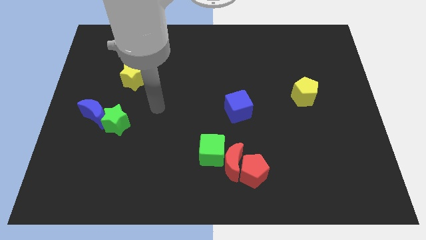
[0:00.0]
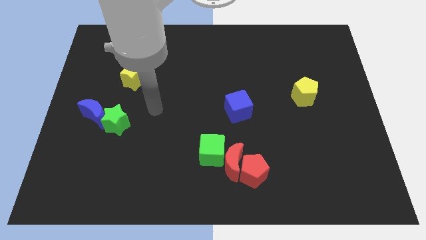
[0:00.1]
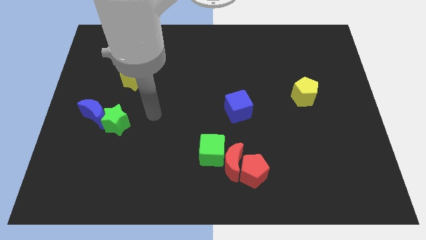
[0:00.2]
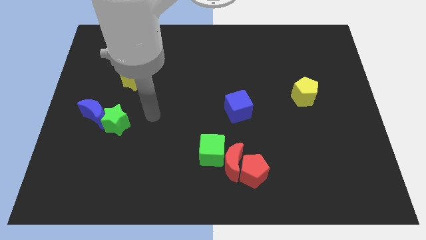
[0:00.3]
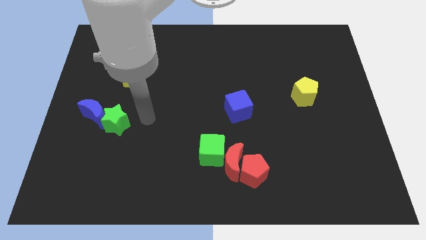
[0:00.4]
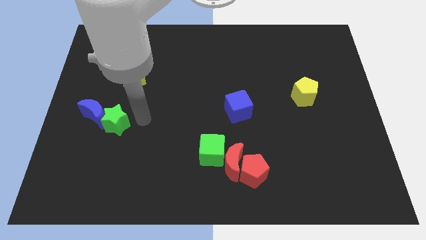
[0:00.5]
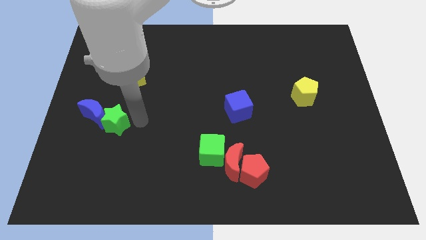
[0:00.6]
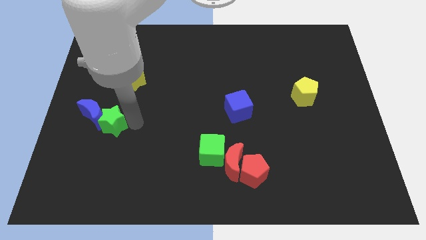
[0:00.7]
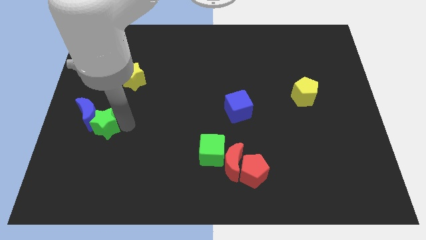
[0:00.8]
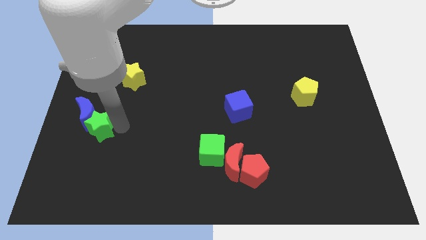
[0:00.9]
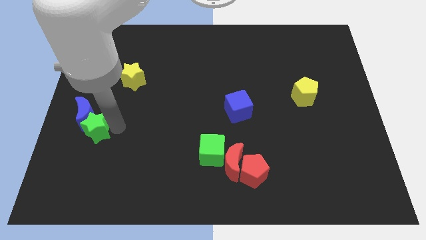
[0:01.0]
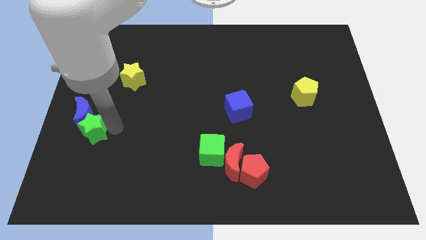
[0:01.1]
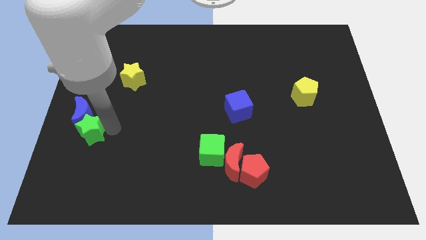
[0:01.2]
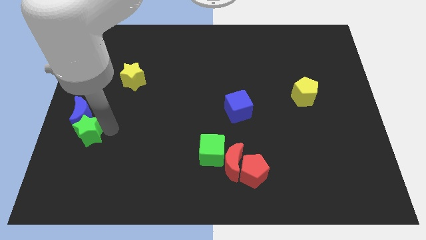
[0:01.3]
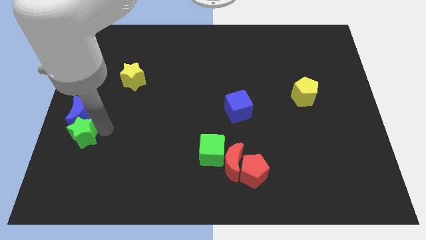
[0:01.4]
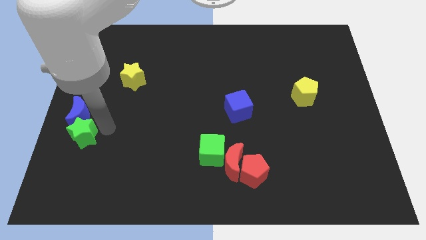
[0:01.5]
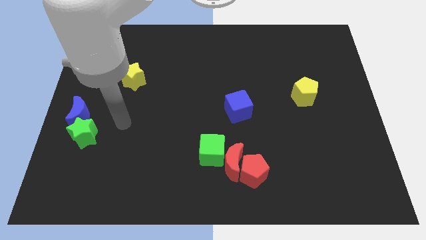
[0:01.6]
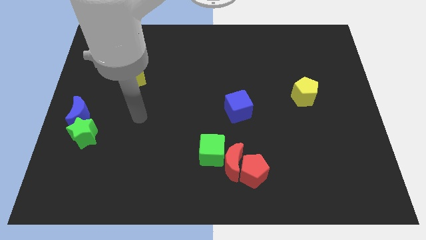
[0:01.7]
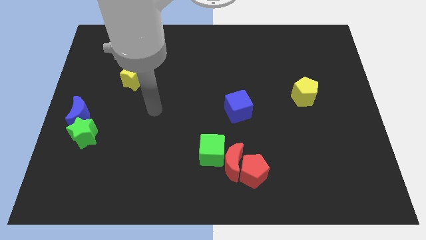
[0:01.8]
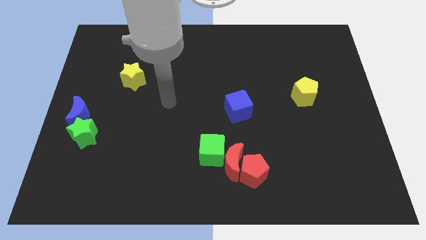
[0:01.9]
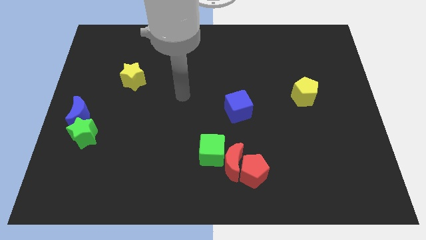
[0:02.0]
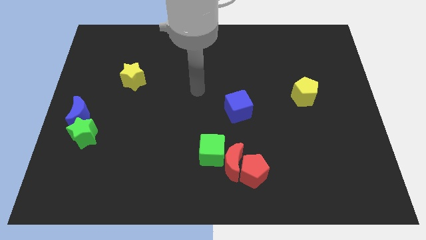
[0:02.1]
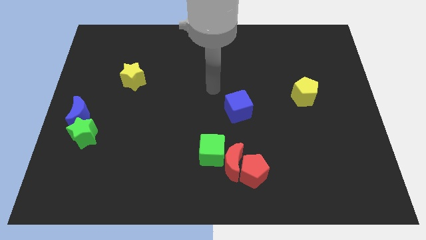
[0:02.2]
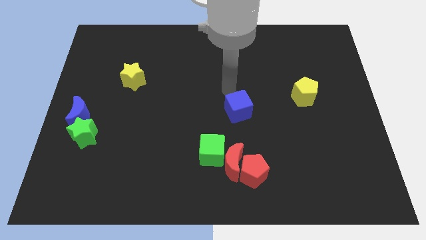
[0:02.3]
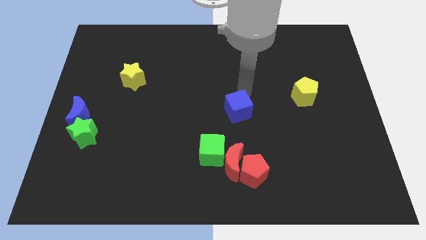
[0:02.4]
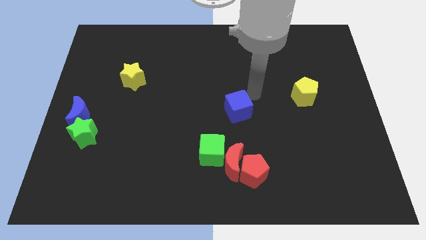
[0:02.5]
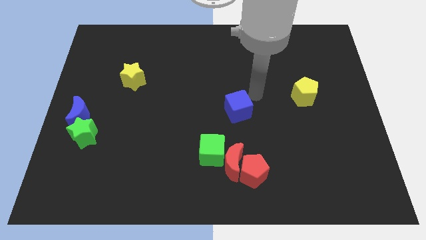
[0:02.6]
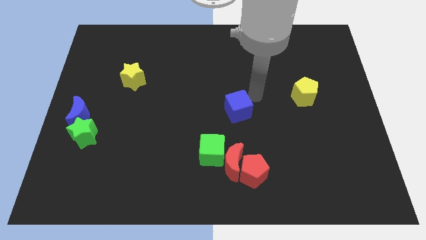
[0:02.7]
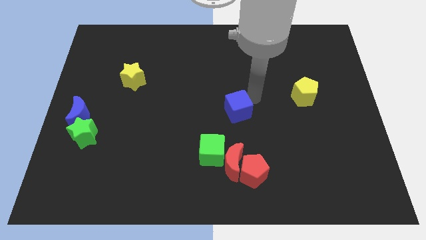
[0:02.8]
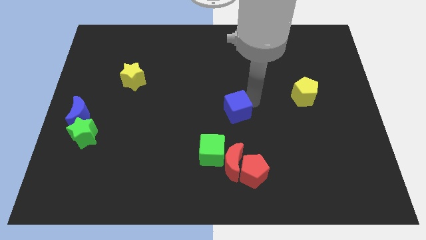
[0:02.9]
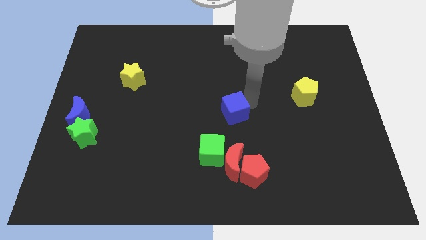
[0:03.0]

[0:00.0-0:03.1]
place the arm right to the blue cube

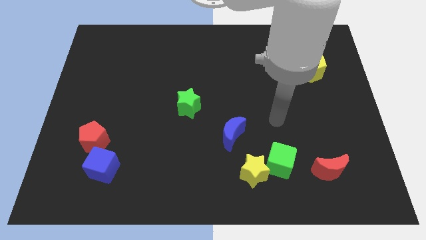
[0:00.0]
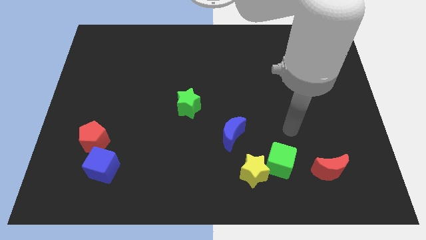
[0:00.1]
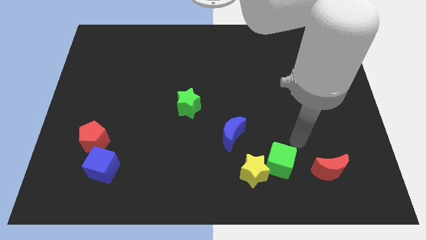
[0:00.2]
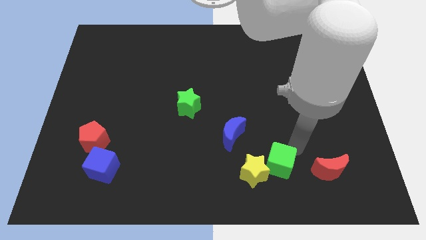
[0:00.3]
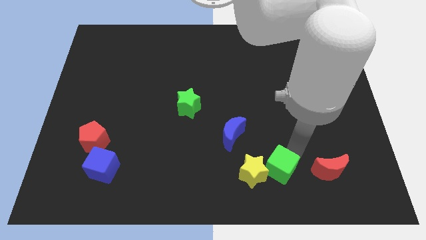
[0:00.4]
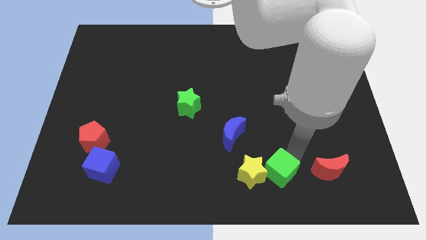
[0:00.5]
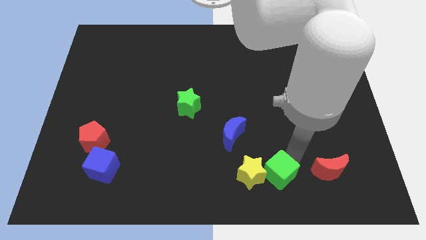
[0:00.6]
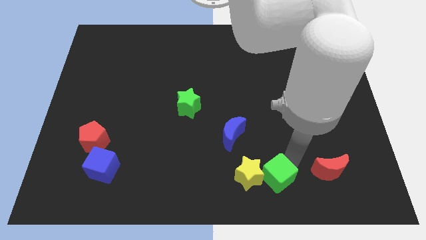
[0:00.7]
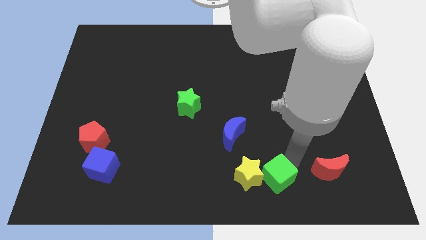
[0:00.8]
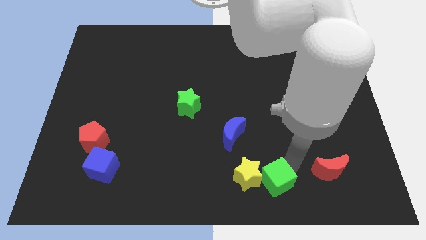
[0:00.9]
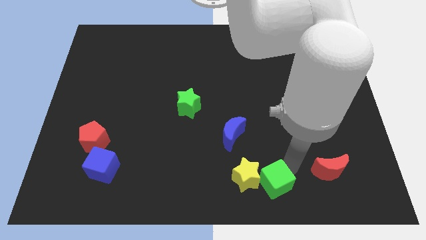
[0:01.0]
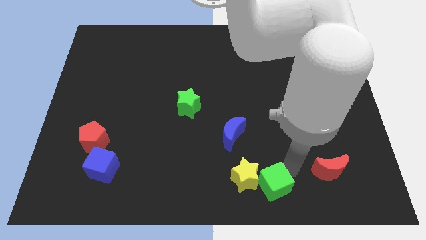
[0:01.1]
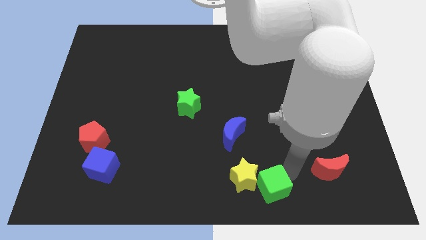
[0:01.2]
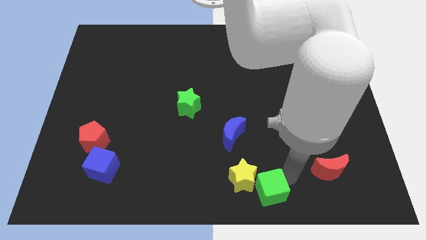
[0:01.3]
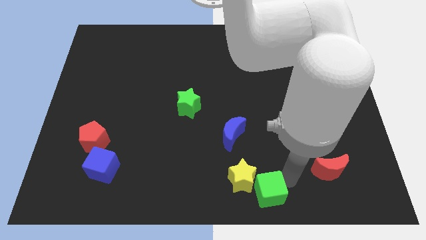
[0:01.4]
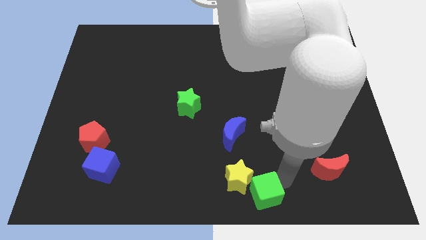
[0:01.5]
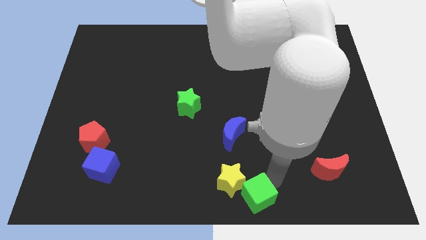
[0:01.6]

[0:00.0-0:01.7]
move green cube to the bottom of the board

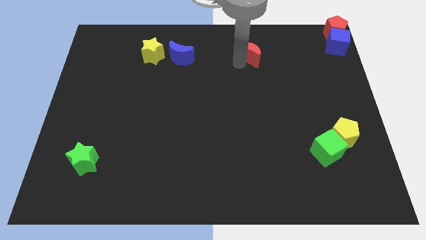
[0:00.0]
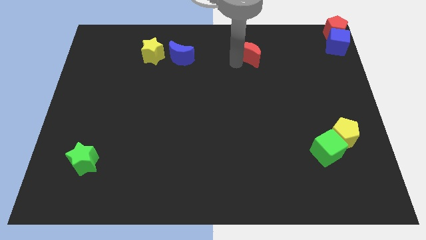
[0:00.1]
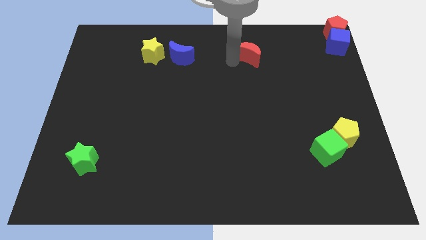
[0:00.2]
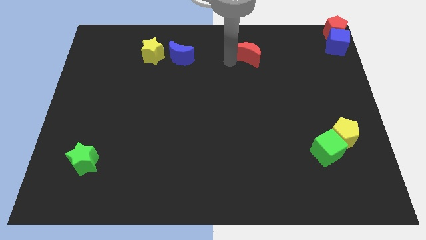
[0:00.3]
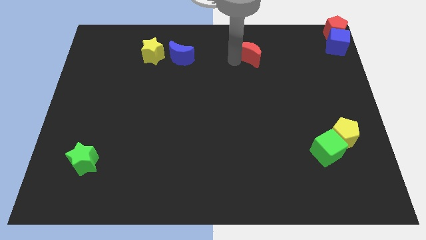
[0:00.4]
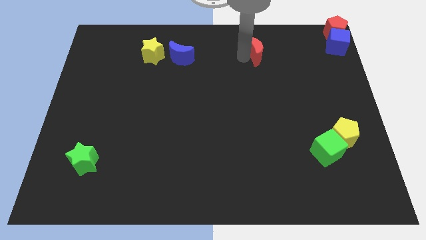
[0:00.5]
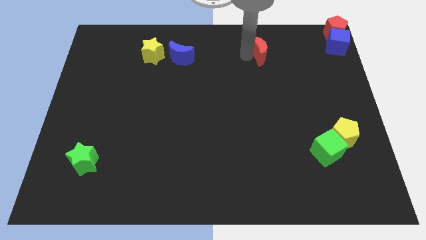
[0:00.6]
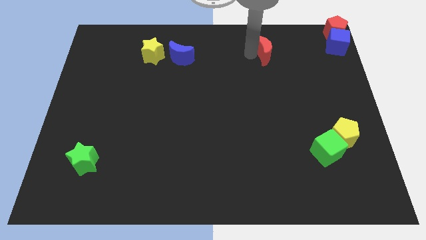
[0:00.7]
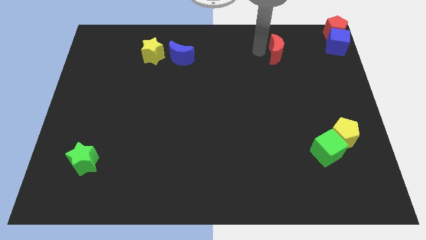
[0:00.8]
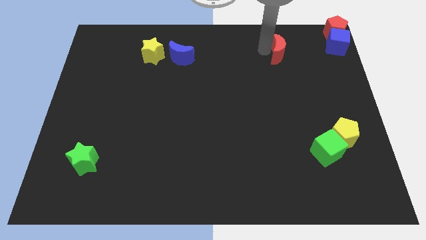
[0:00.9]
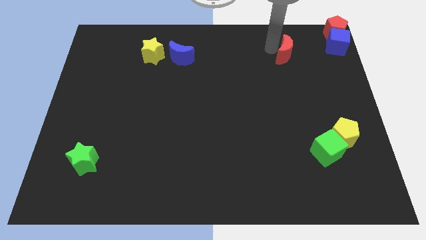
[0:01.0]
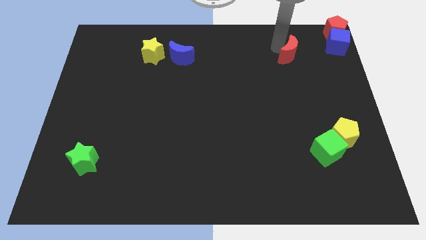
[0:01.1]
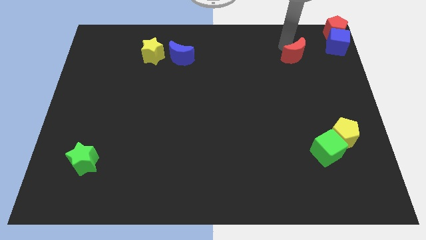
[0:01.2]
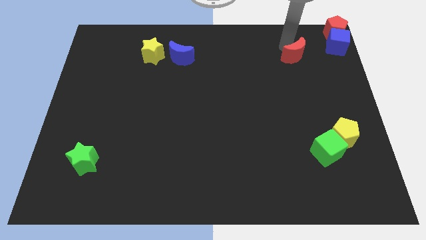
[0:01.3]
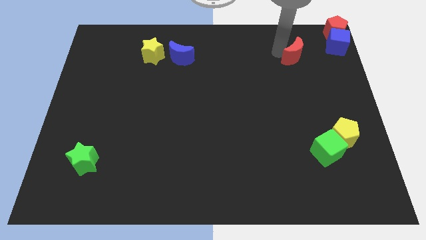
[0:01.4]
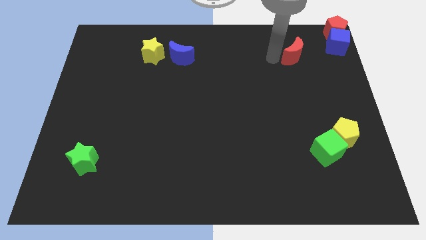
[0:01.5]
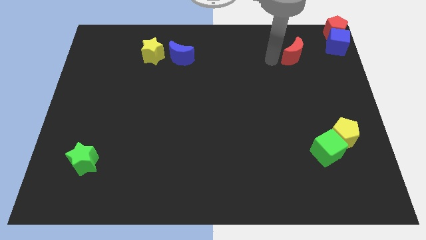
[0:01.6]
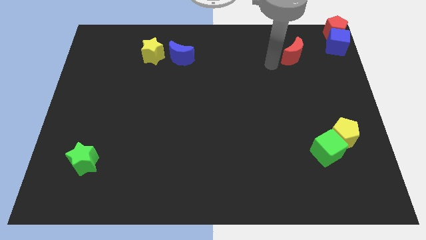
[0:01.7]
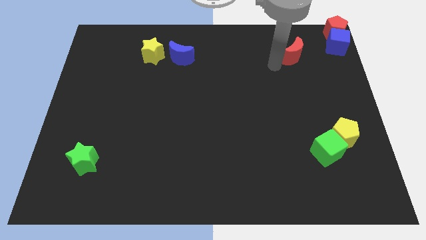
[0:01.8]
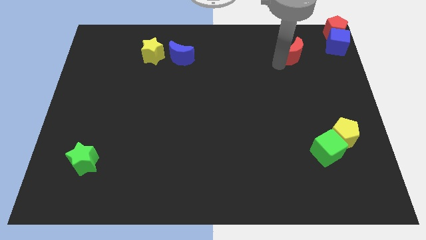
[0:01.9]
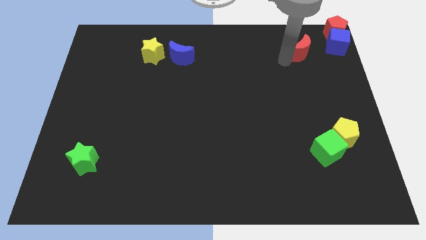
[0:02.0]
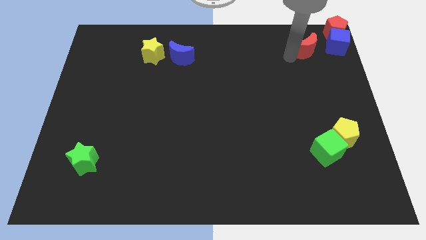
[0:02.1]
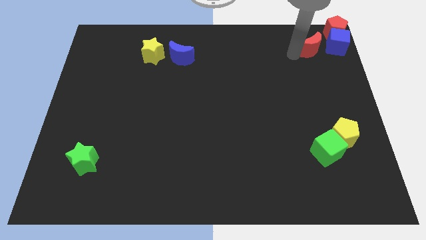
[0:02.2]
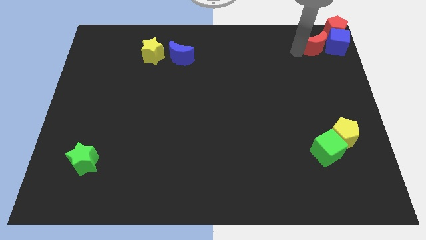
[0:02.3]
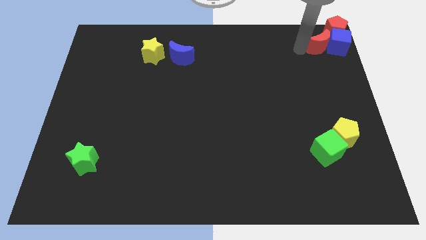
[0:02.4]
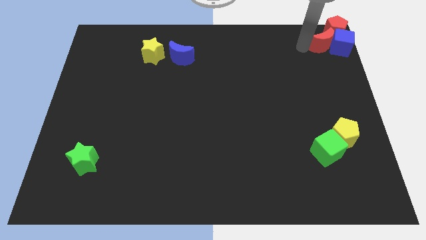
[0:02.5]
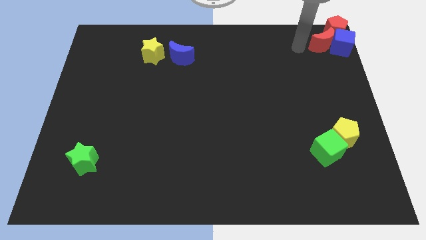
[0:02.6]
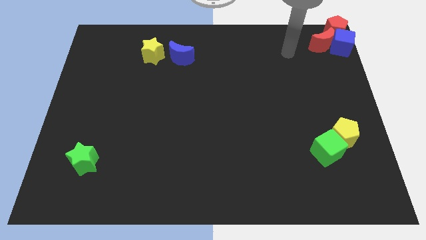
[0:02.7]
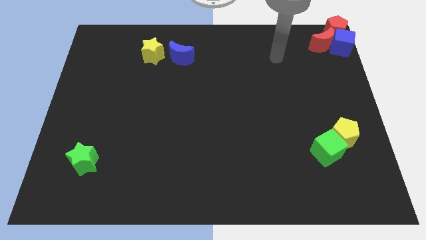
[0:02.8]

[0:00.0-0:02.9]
push the red crescent into the blue cube

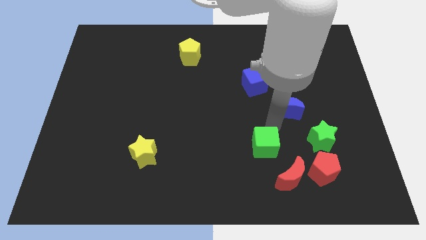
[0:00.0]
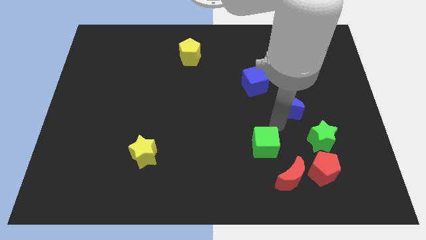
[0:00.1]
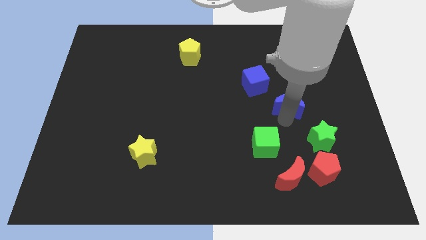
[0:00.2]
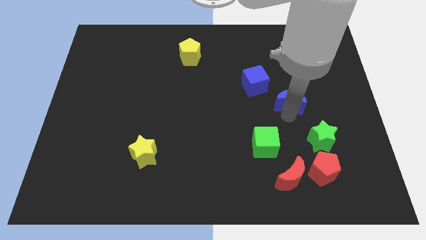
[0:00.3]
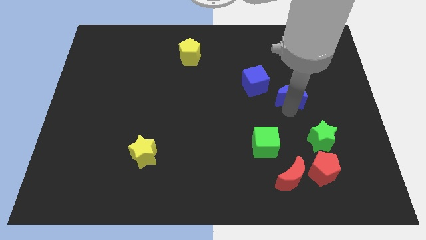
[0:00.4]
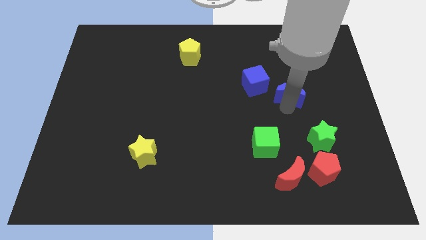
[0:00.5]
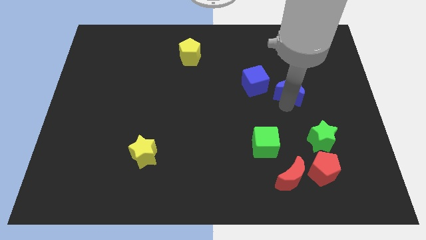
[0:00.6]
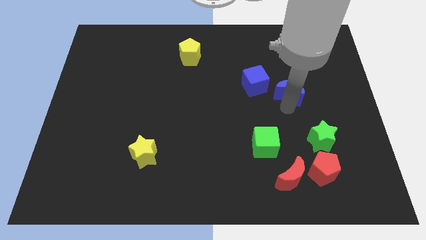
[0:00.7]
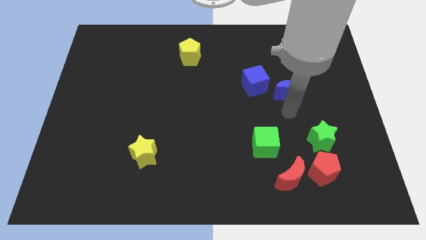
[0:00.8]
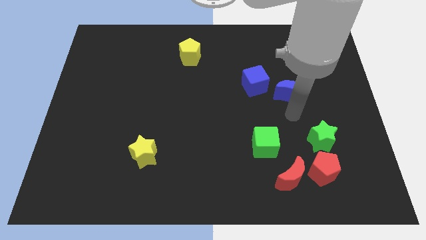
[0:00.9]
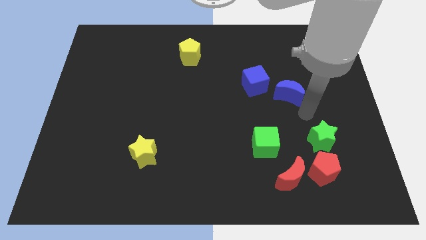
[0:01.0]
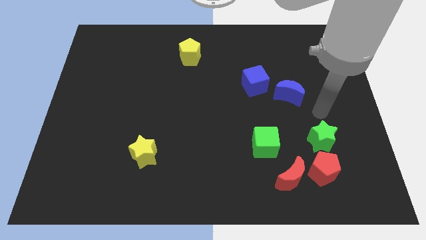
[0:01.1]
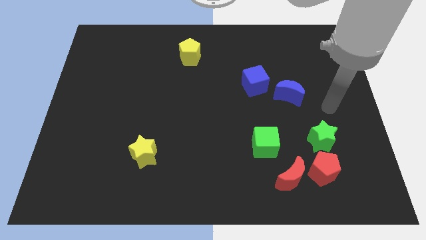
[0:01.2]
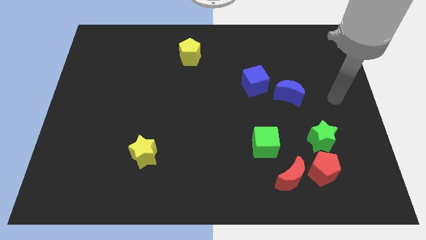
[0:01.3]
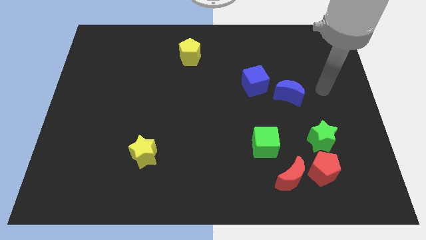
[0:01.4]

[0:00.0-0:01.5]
move the blue crescent up slightly
